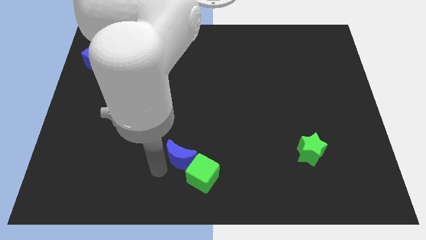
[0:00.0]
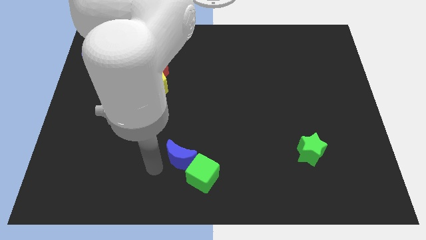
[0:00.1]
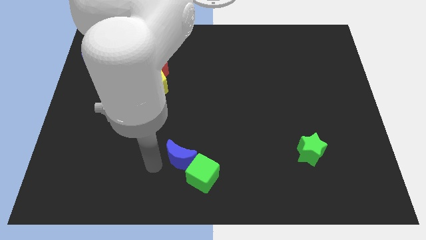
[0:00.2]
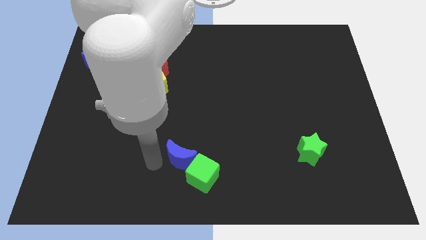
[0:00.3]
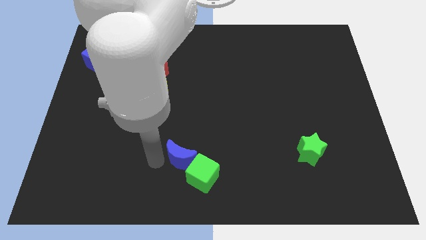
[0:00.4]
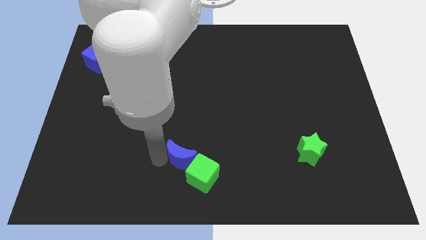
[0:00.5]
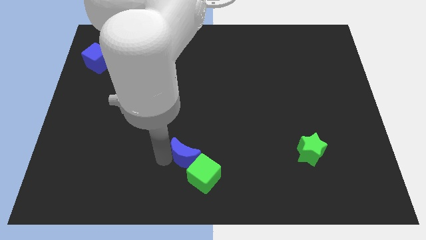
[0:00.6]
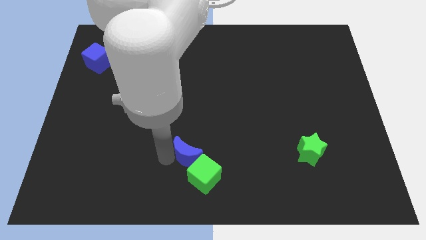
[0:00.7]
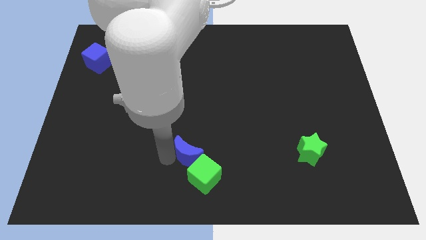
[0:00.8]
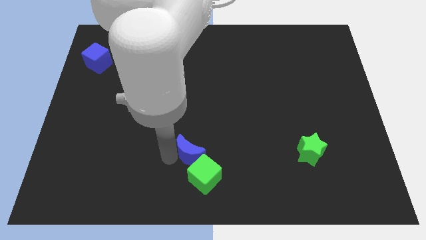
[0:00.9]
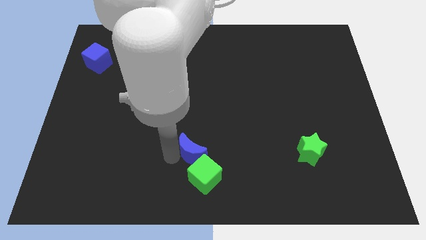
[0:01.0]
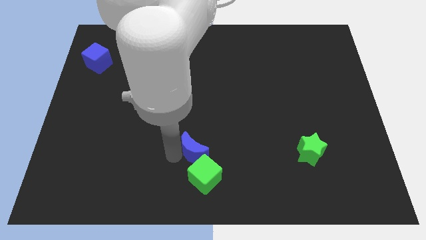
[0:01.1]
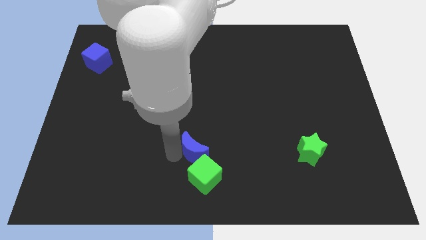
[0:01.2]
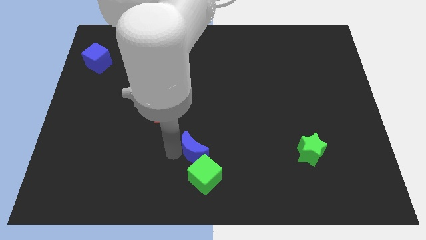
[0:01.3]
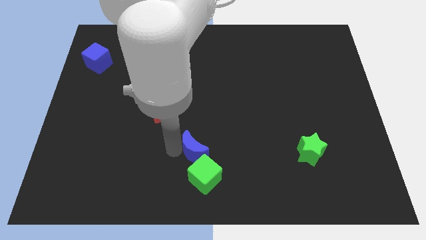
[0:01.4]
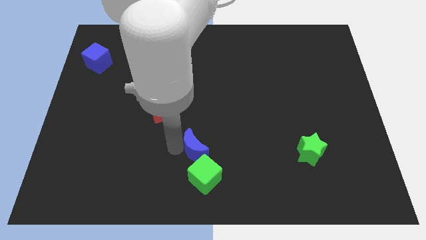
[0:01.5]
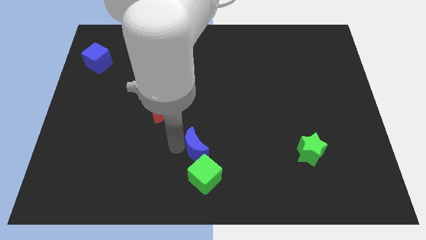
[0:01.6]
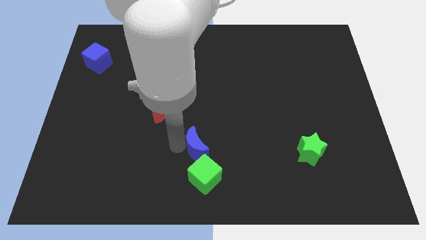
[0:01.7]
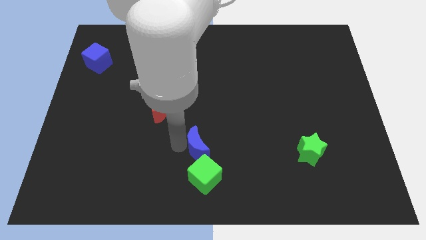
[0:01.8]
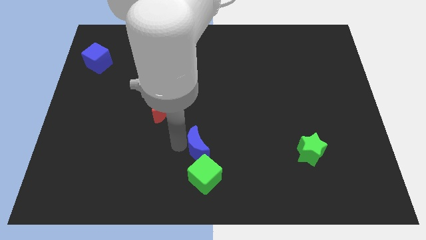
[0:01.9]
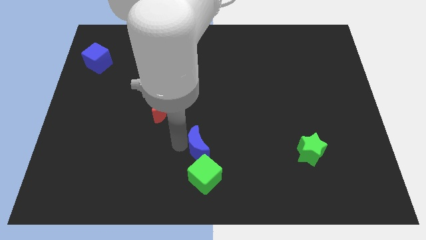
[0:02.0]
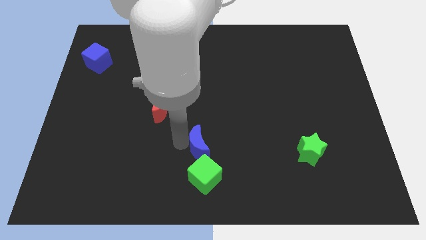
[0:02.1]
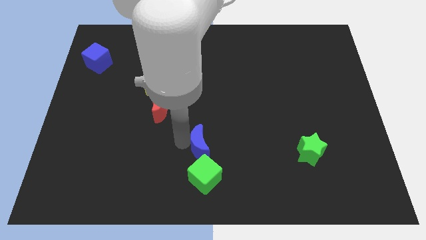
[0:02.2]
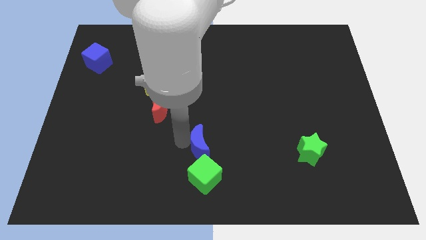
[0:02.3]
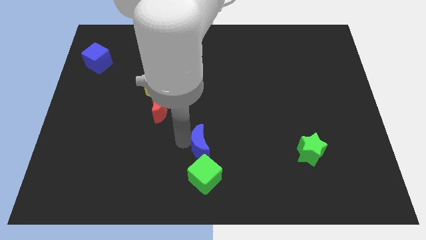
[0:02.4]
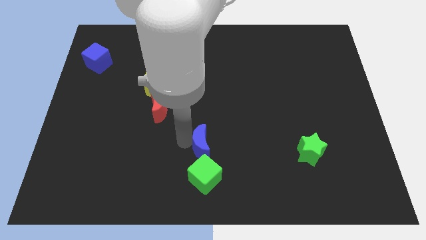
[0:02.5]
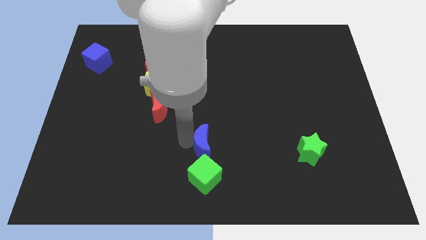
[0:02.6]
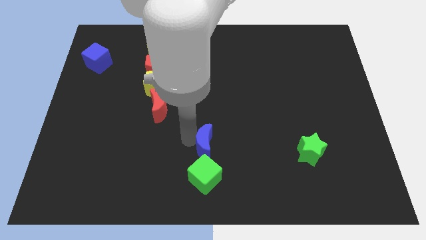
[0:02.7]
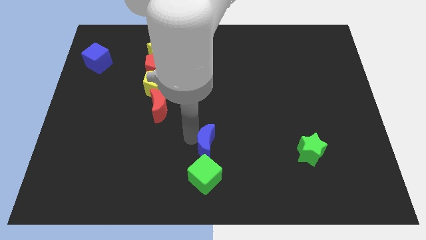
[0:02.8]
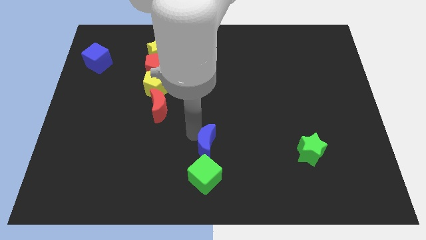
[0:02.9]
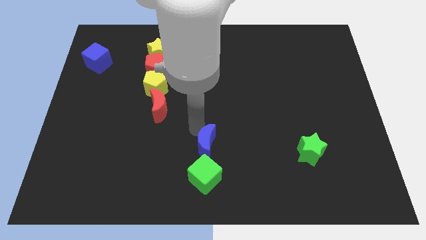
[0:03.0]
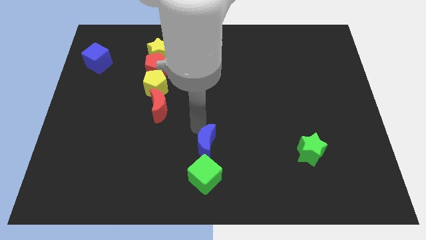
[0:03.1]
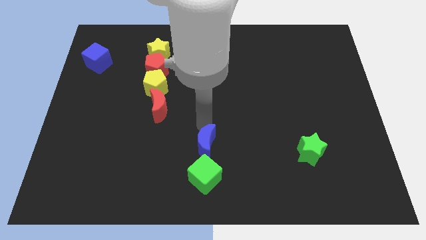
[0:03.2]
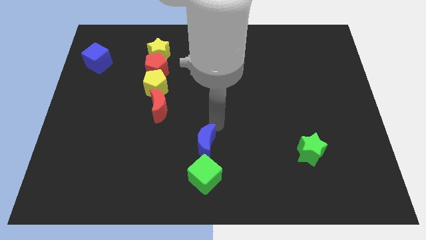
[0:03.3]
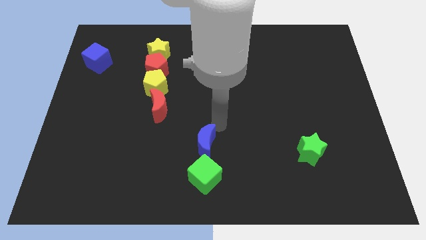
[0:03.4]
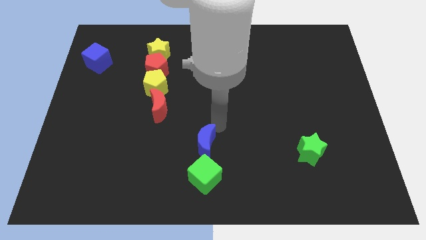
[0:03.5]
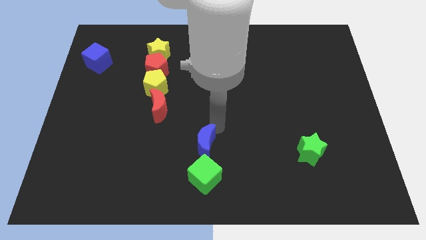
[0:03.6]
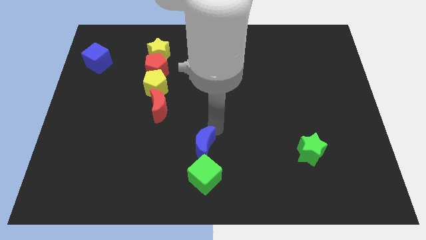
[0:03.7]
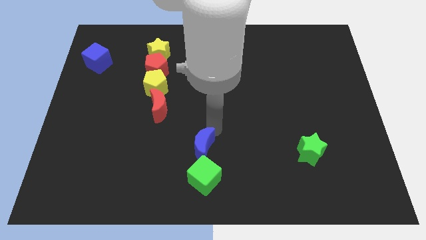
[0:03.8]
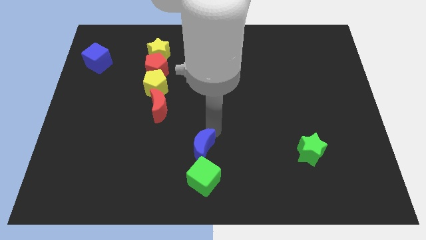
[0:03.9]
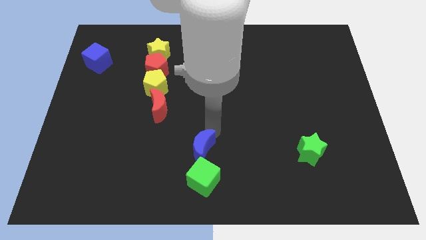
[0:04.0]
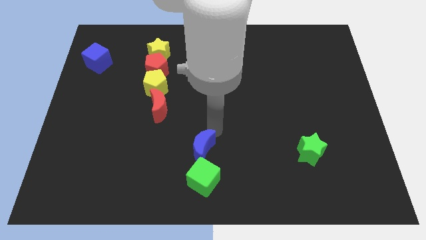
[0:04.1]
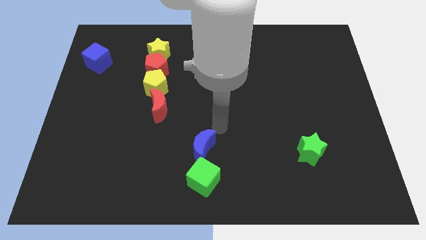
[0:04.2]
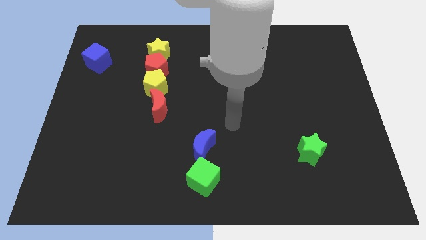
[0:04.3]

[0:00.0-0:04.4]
move the blue crescent towards the top of the green cube

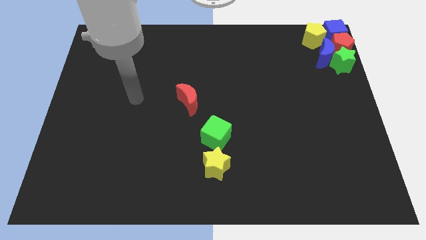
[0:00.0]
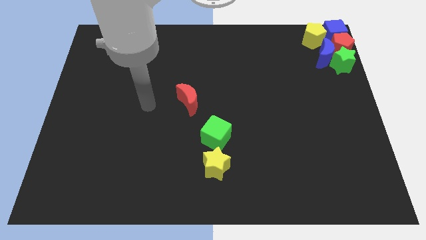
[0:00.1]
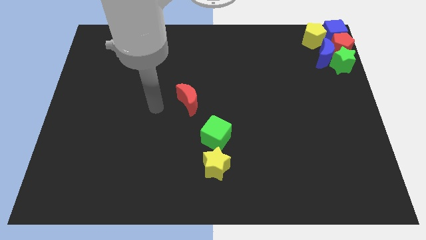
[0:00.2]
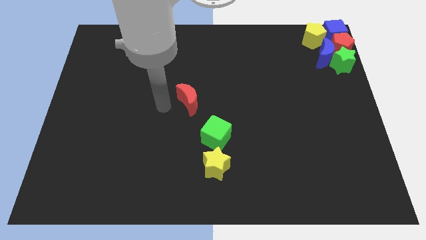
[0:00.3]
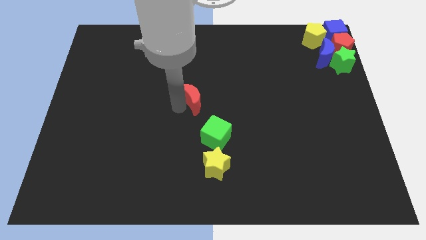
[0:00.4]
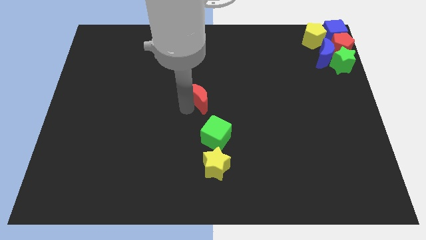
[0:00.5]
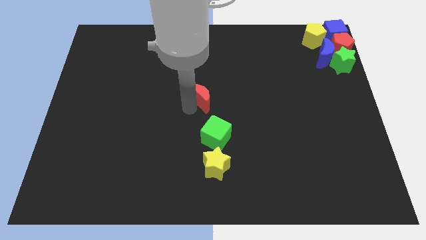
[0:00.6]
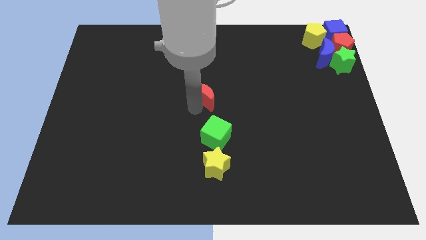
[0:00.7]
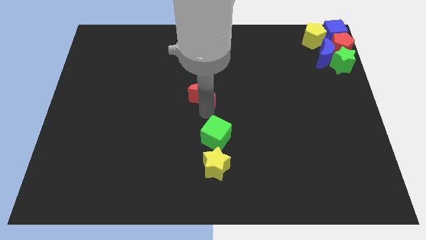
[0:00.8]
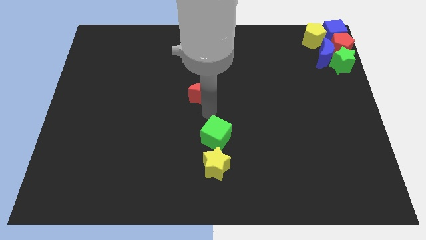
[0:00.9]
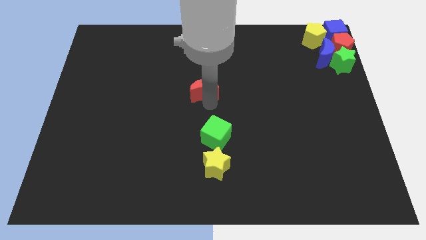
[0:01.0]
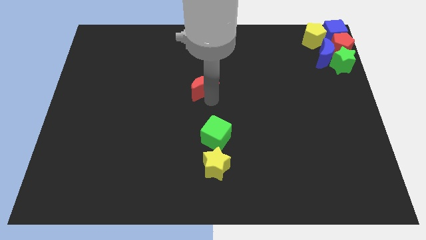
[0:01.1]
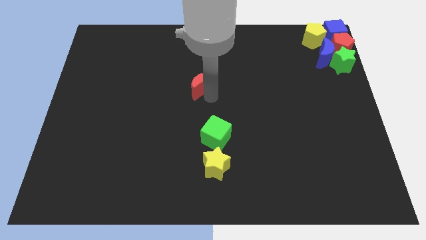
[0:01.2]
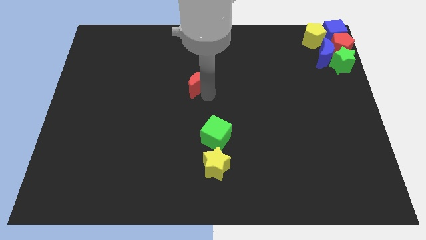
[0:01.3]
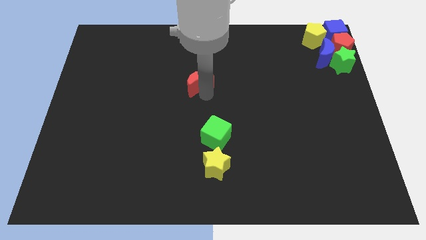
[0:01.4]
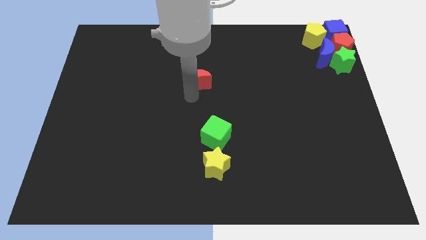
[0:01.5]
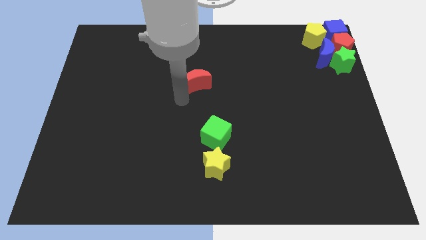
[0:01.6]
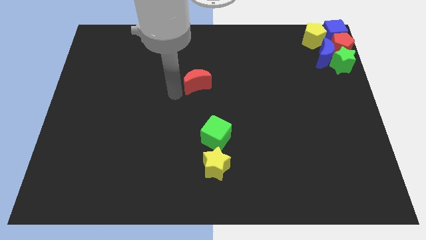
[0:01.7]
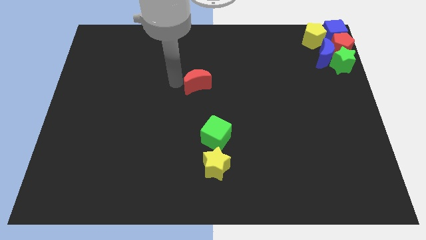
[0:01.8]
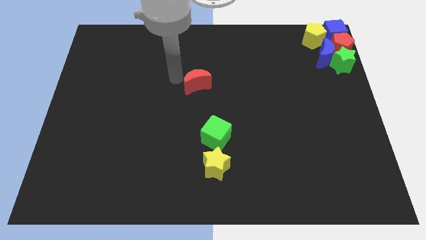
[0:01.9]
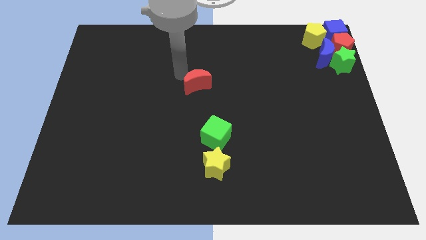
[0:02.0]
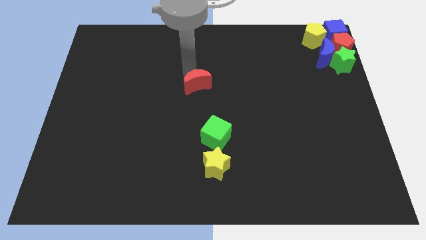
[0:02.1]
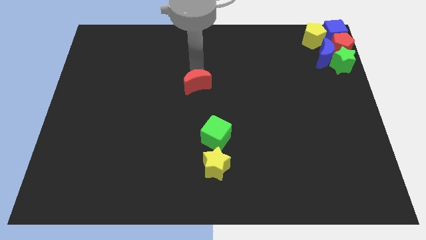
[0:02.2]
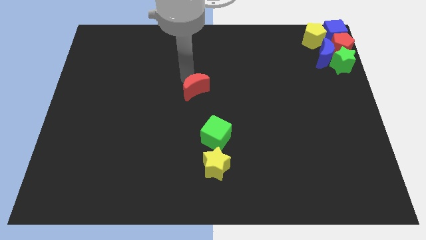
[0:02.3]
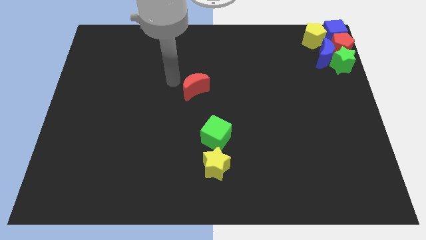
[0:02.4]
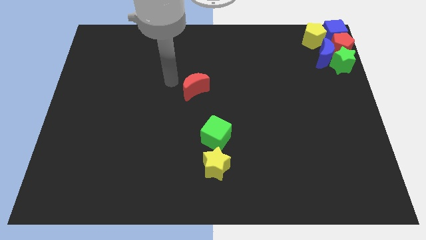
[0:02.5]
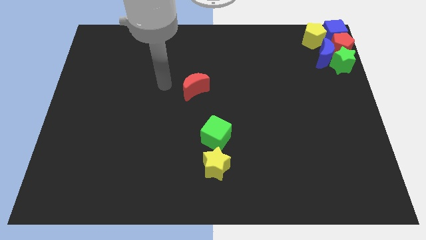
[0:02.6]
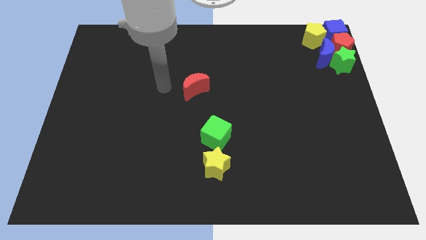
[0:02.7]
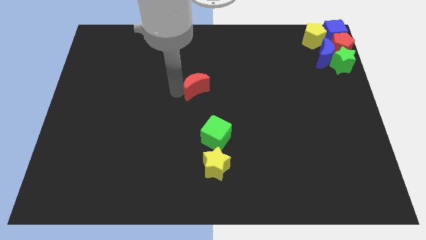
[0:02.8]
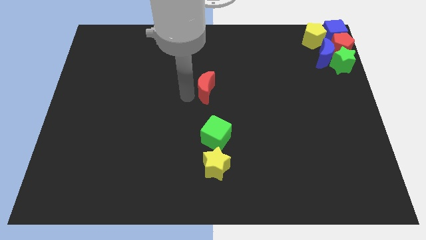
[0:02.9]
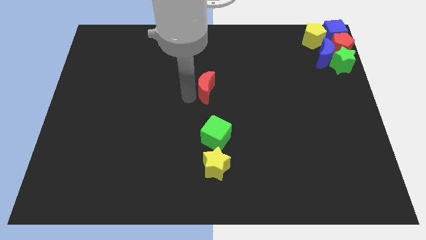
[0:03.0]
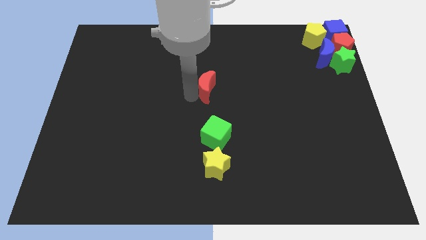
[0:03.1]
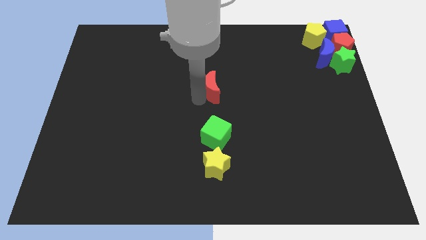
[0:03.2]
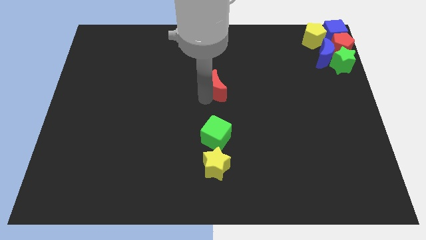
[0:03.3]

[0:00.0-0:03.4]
put the red crescent above the green cube

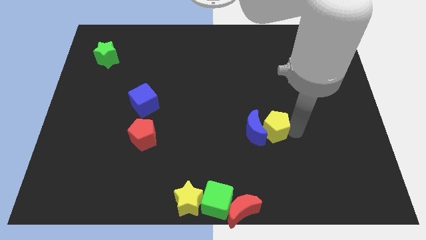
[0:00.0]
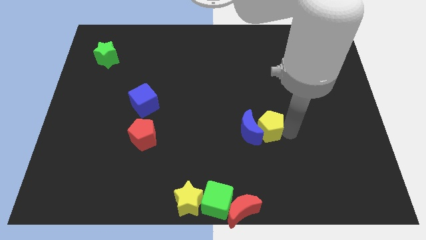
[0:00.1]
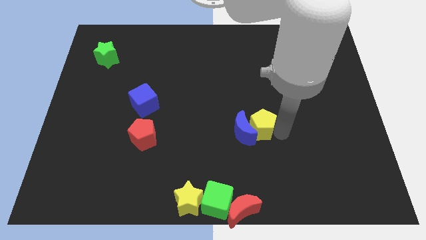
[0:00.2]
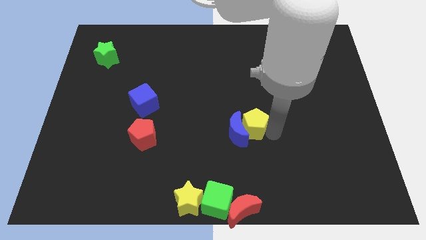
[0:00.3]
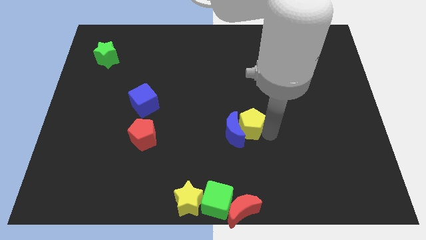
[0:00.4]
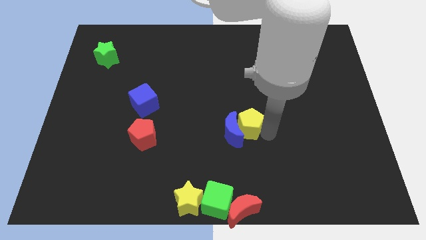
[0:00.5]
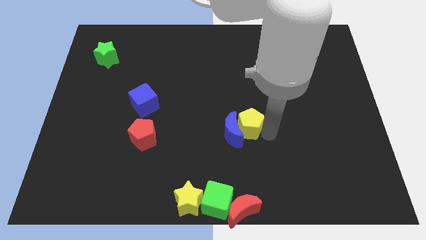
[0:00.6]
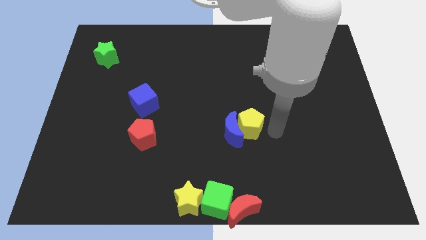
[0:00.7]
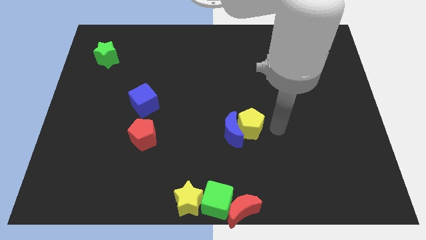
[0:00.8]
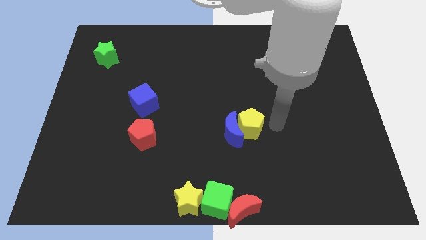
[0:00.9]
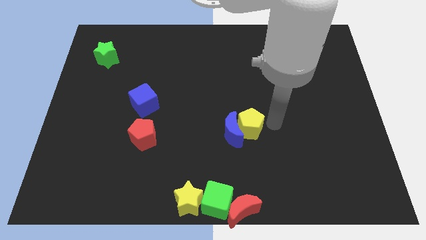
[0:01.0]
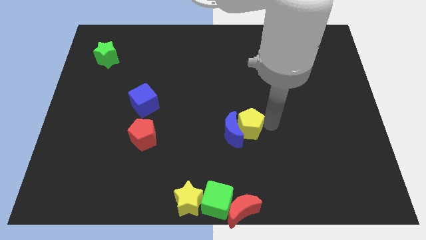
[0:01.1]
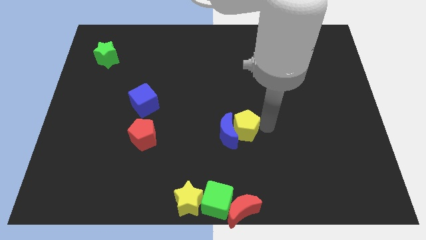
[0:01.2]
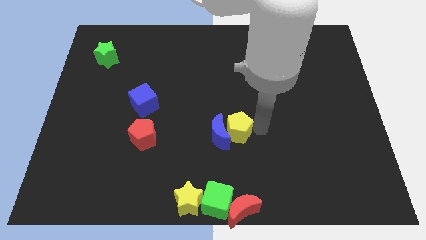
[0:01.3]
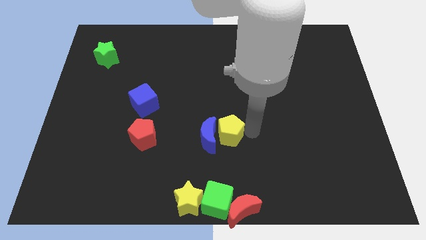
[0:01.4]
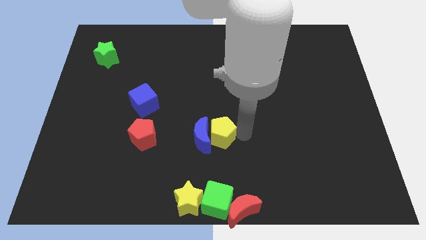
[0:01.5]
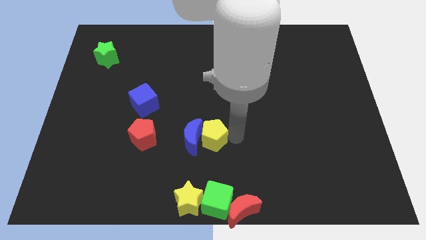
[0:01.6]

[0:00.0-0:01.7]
push the blue moon and yellow pentagon horizontal to the red pentagon
